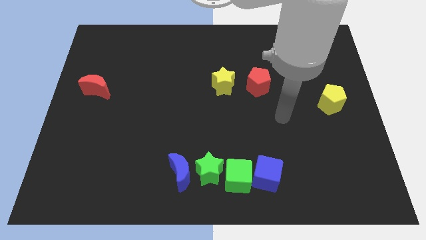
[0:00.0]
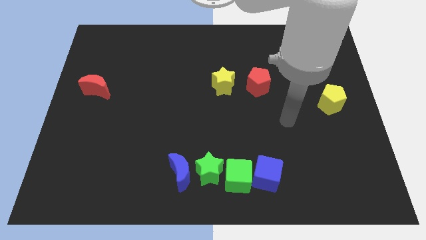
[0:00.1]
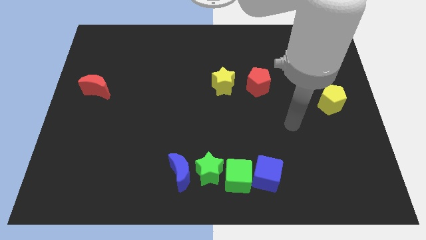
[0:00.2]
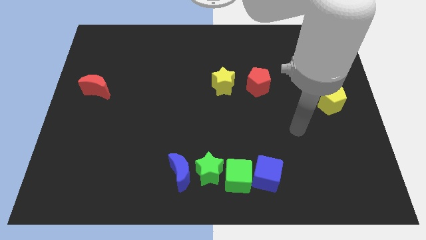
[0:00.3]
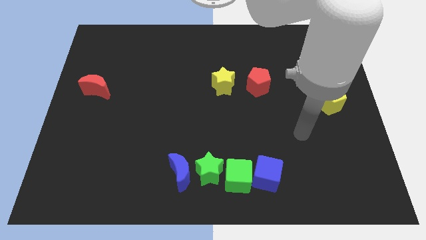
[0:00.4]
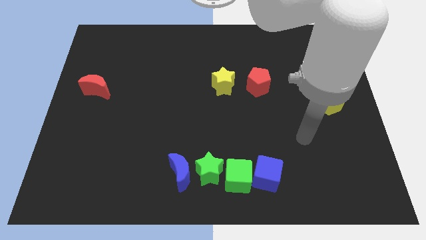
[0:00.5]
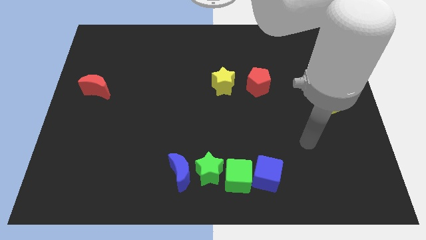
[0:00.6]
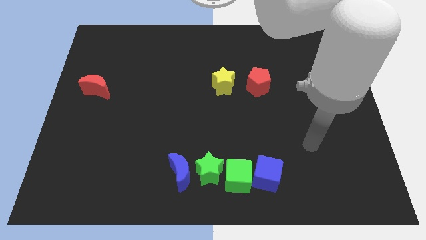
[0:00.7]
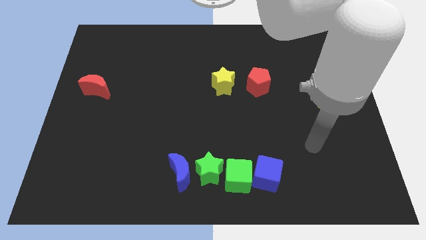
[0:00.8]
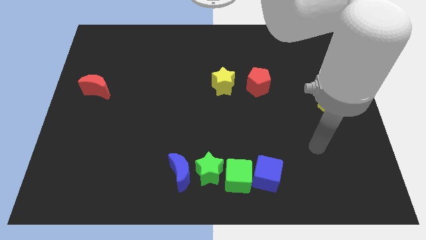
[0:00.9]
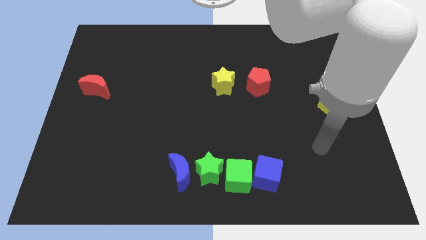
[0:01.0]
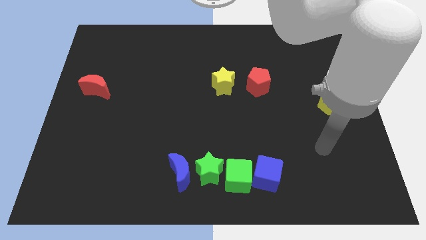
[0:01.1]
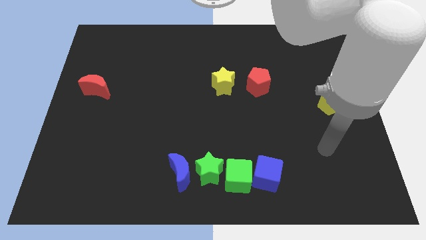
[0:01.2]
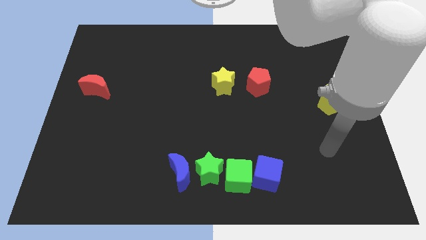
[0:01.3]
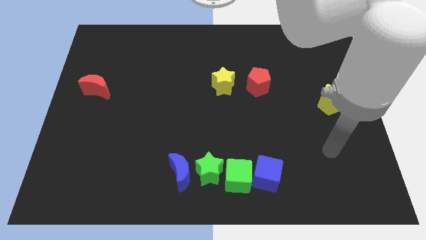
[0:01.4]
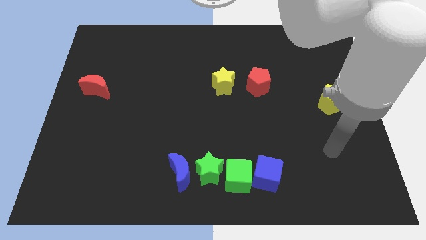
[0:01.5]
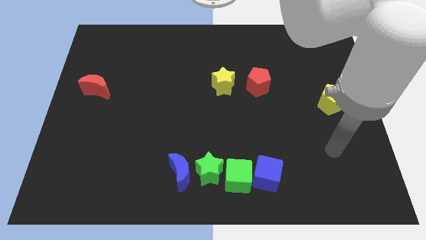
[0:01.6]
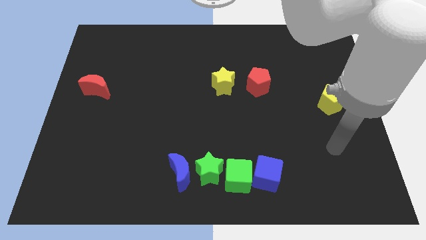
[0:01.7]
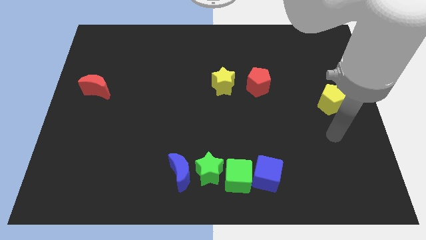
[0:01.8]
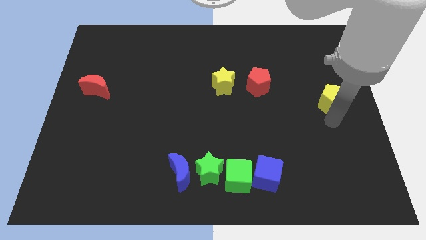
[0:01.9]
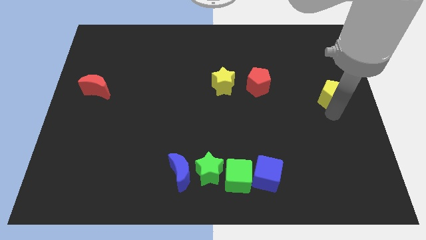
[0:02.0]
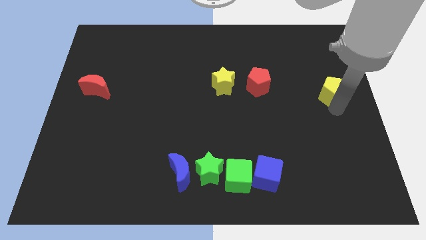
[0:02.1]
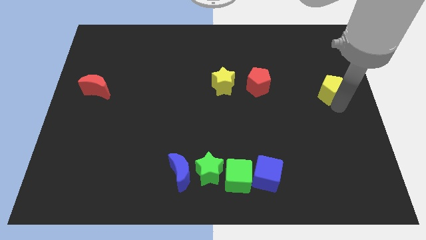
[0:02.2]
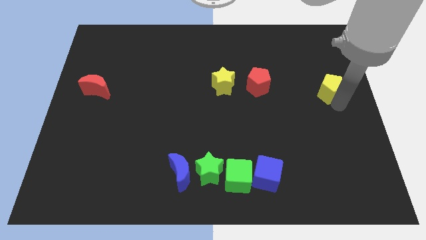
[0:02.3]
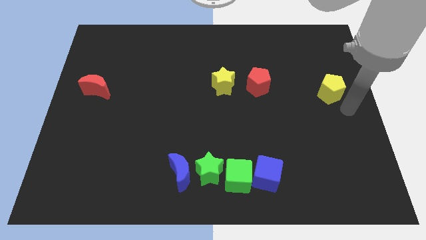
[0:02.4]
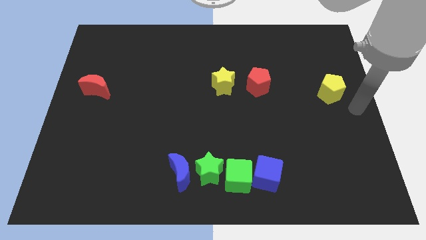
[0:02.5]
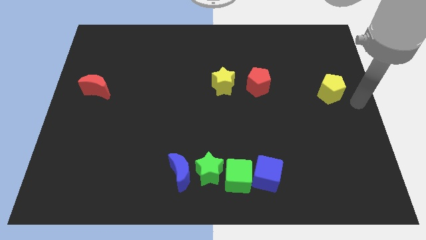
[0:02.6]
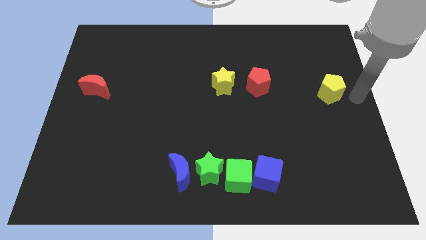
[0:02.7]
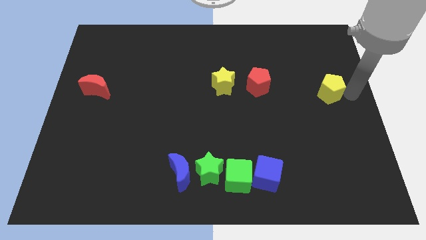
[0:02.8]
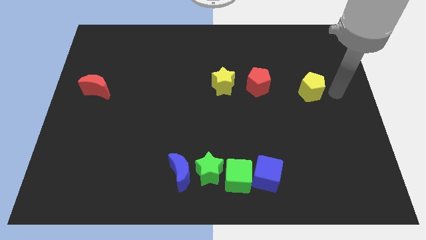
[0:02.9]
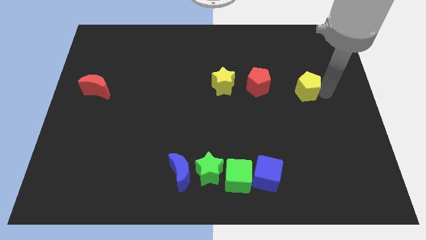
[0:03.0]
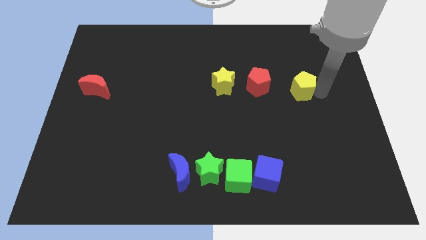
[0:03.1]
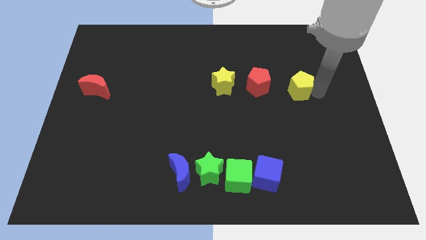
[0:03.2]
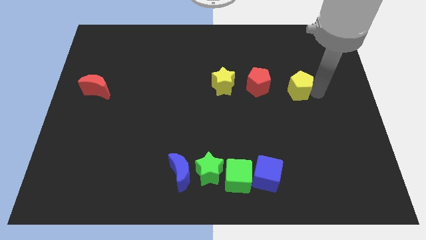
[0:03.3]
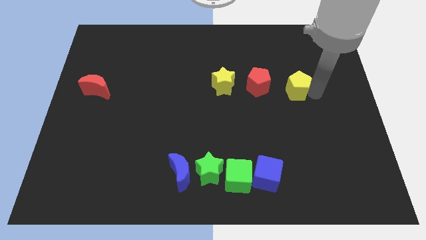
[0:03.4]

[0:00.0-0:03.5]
move the yellow pentagon to the right of the red pentagon

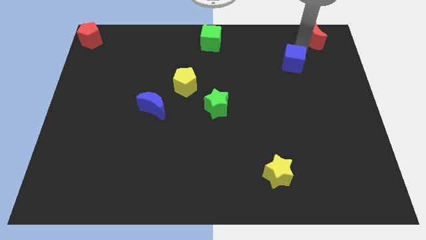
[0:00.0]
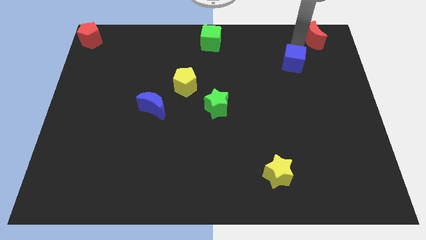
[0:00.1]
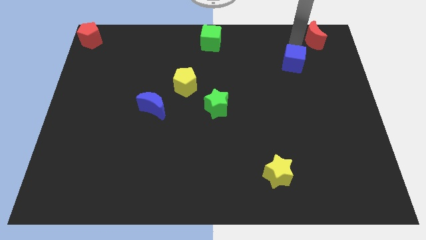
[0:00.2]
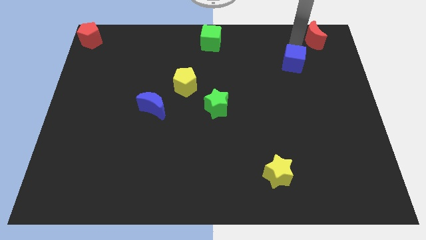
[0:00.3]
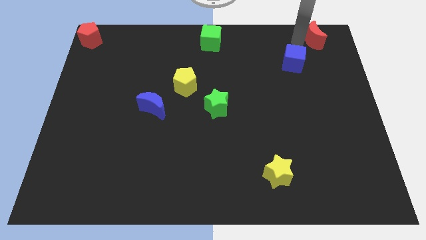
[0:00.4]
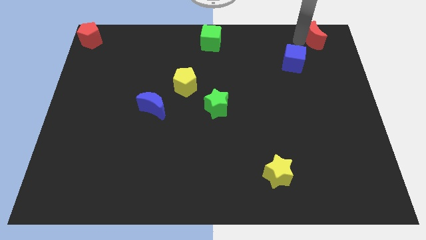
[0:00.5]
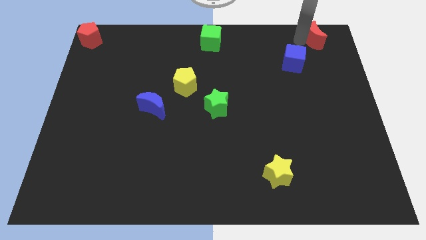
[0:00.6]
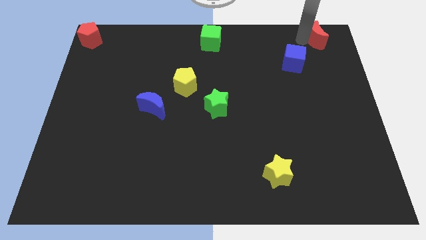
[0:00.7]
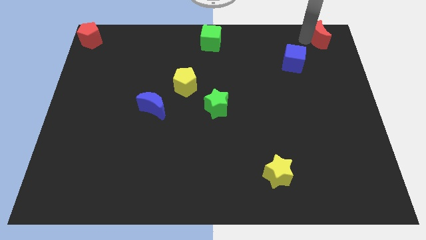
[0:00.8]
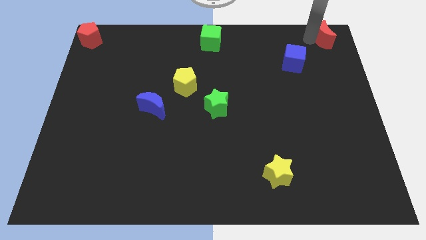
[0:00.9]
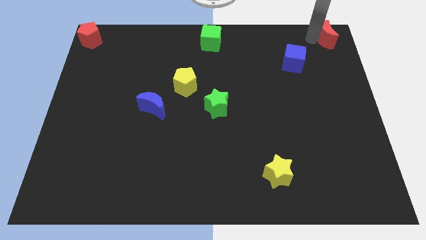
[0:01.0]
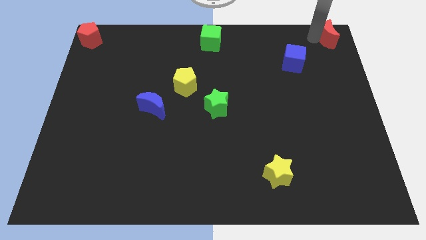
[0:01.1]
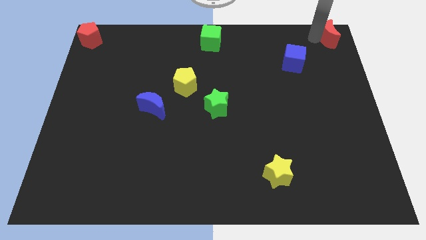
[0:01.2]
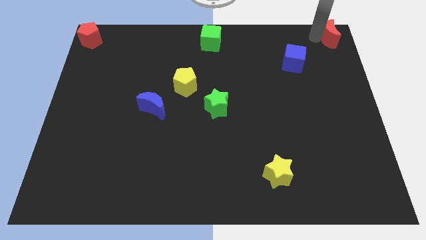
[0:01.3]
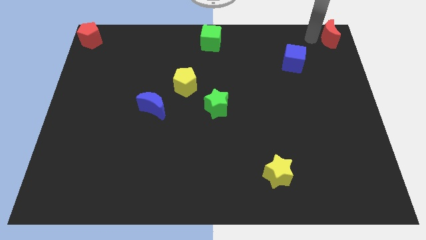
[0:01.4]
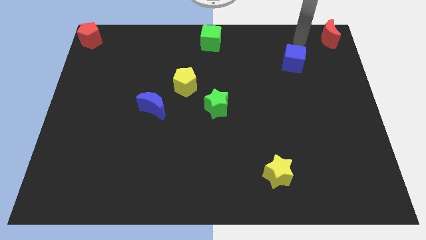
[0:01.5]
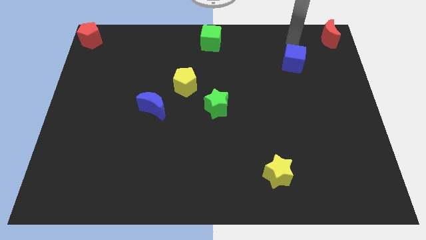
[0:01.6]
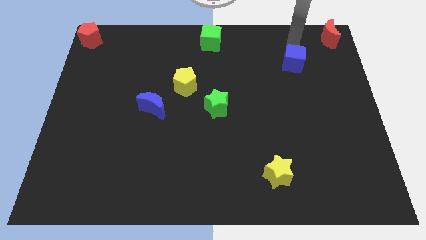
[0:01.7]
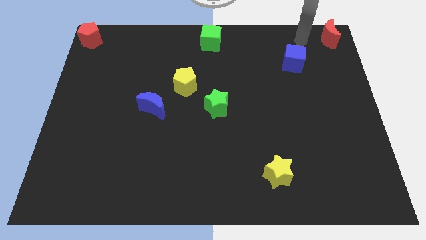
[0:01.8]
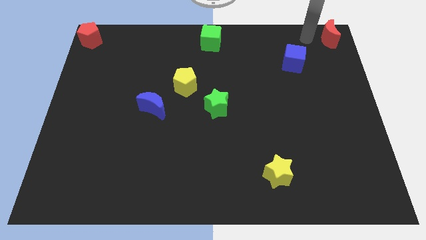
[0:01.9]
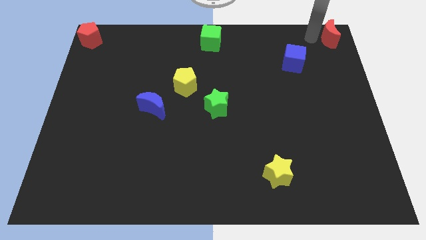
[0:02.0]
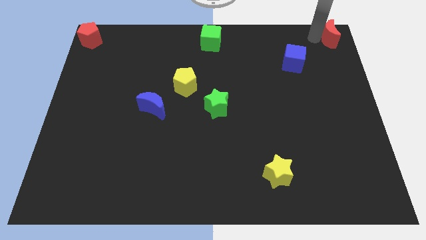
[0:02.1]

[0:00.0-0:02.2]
move the red moon to the top right side of the board

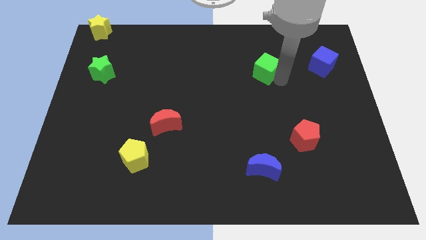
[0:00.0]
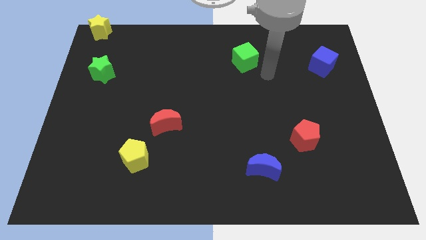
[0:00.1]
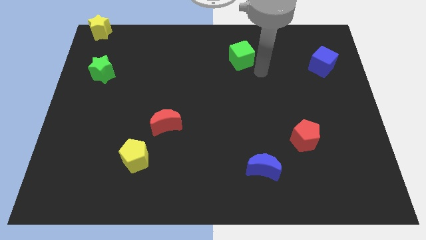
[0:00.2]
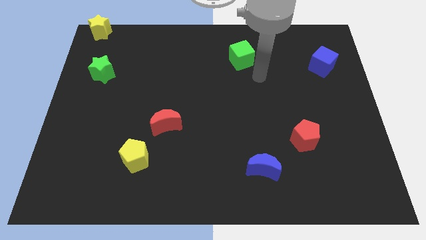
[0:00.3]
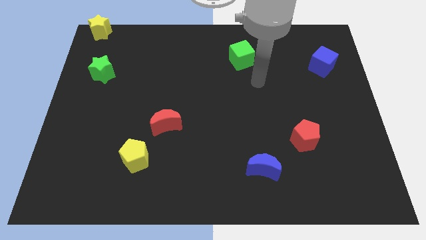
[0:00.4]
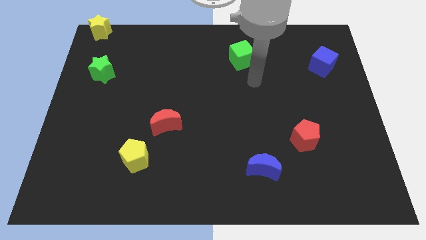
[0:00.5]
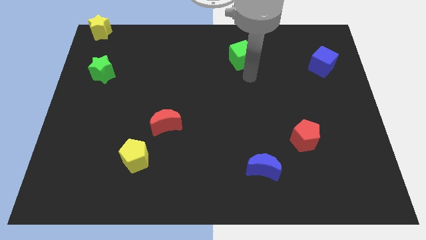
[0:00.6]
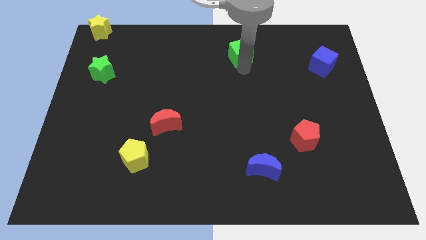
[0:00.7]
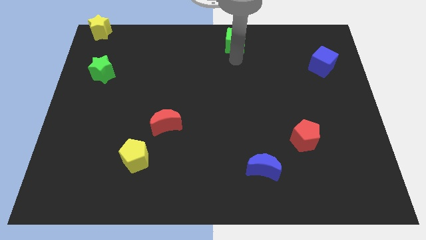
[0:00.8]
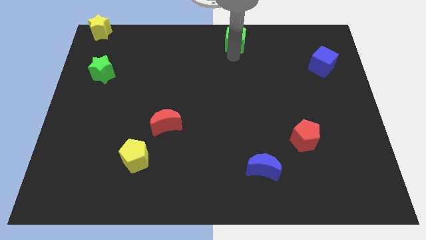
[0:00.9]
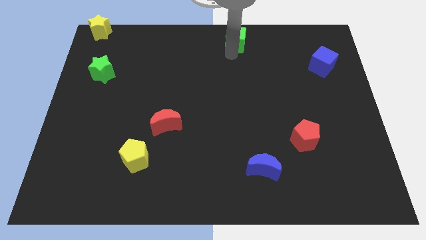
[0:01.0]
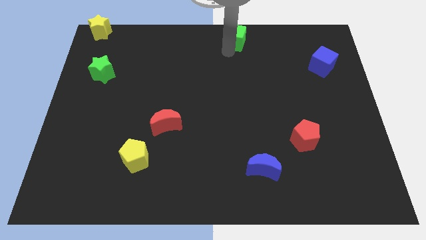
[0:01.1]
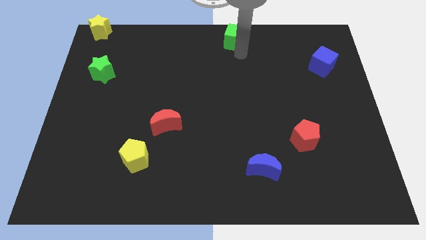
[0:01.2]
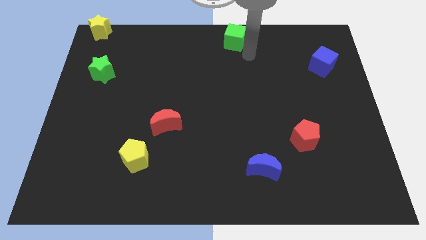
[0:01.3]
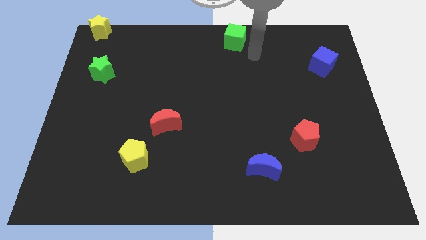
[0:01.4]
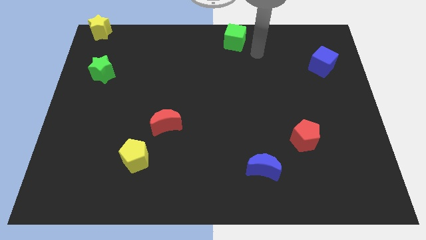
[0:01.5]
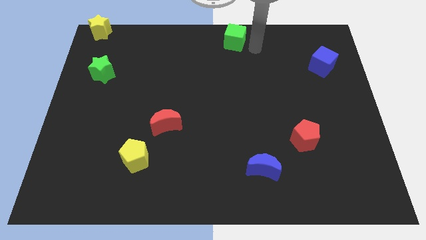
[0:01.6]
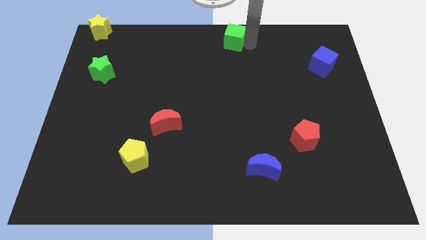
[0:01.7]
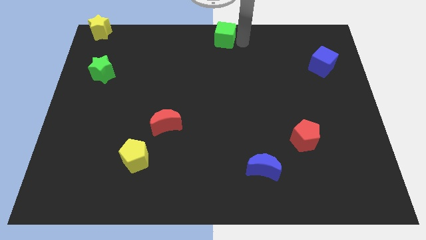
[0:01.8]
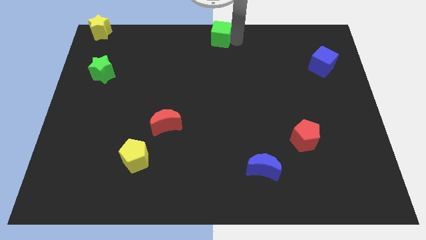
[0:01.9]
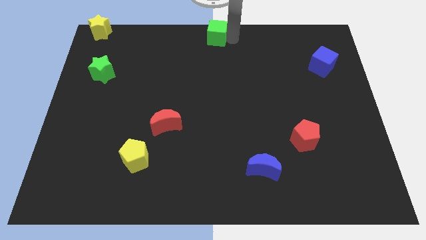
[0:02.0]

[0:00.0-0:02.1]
slide the green cube to the top center of the board

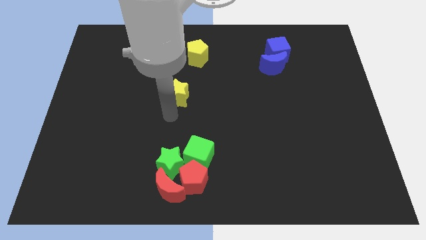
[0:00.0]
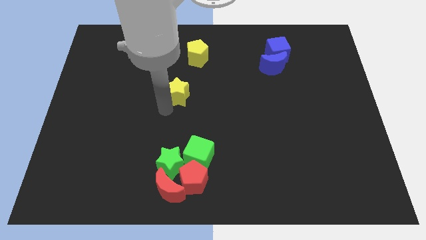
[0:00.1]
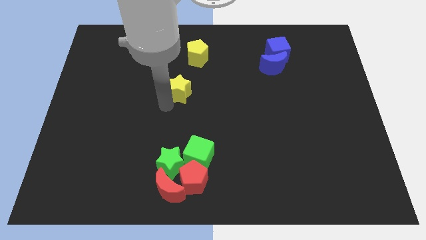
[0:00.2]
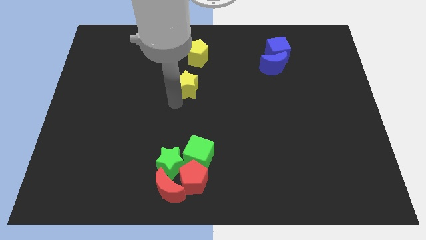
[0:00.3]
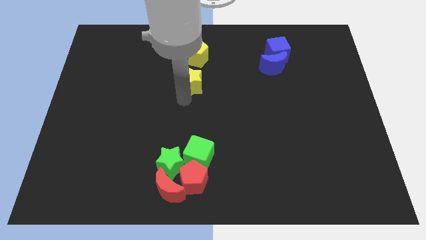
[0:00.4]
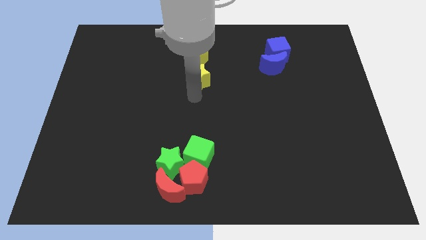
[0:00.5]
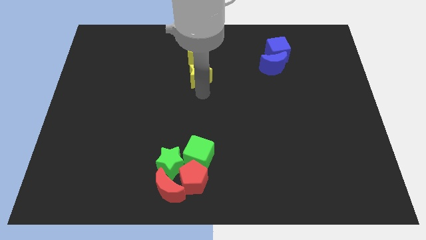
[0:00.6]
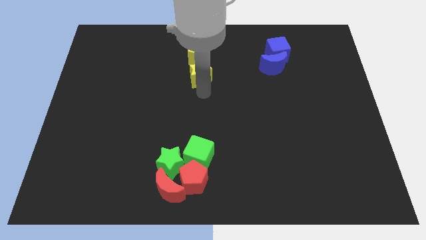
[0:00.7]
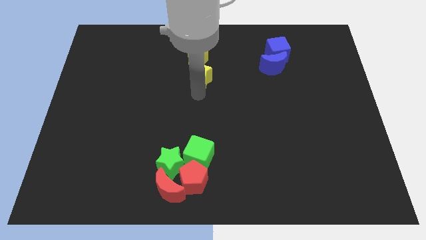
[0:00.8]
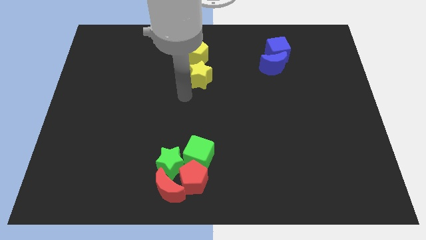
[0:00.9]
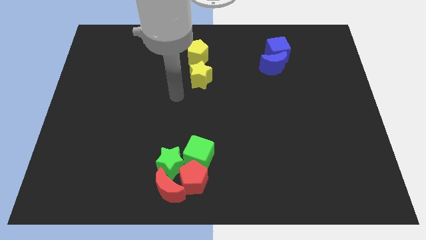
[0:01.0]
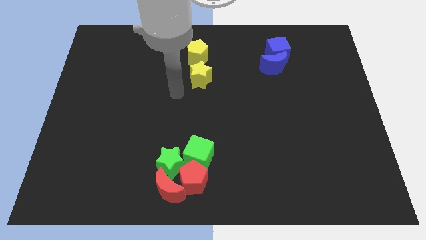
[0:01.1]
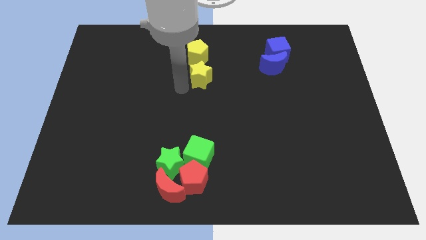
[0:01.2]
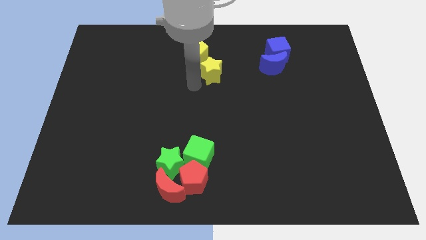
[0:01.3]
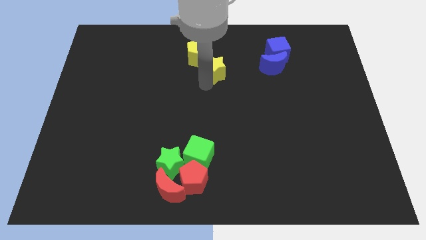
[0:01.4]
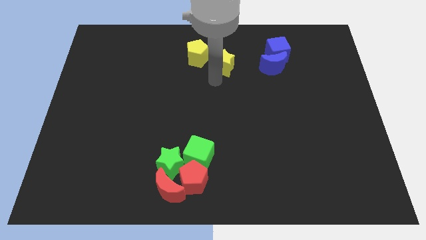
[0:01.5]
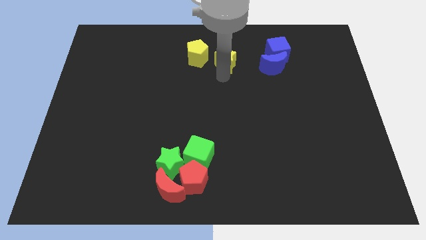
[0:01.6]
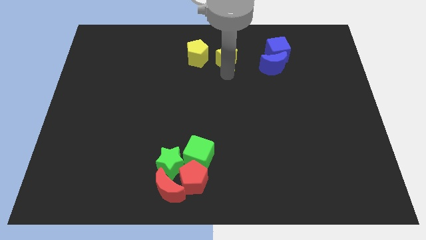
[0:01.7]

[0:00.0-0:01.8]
move the yellow star to the right side of the yellow pentagon
